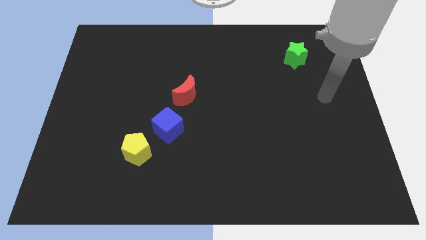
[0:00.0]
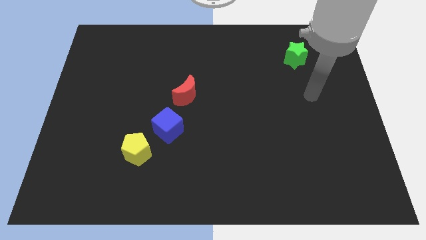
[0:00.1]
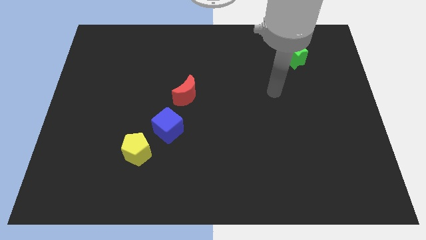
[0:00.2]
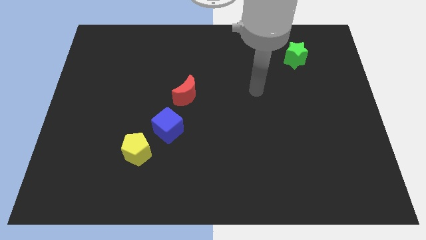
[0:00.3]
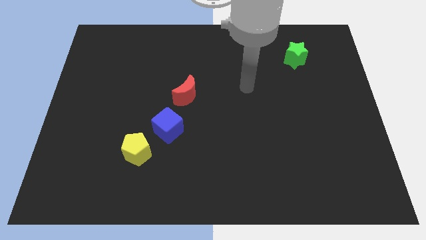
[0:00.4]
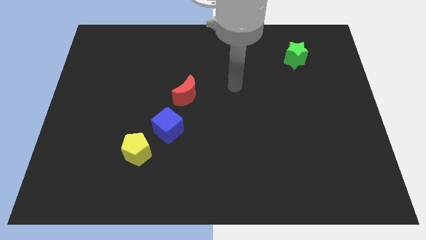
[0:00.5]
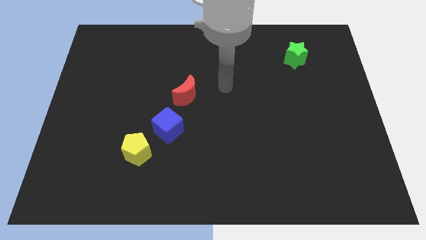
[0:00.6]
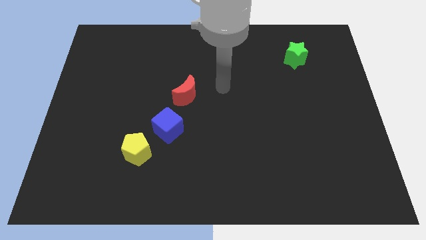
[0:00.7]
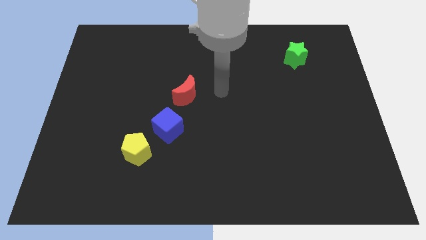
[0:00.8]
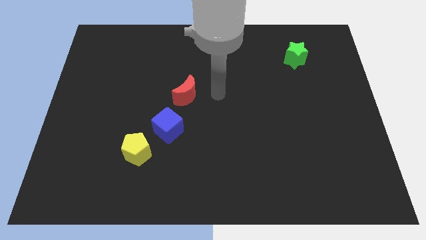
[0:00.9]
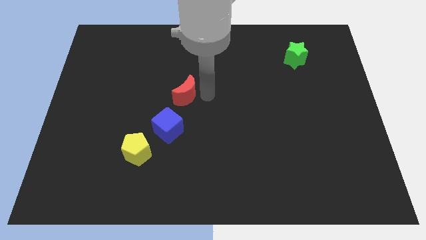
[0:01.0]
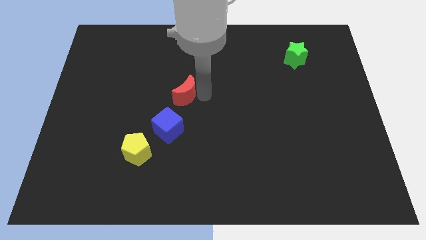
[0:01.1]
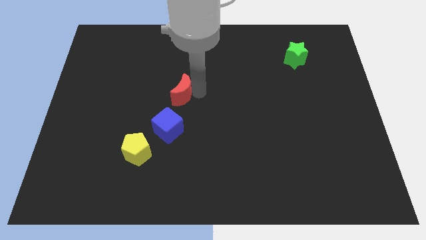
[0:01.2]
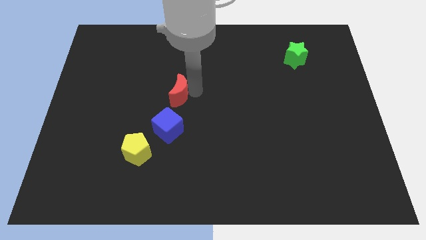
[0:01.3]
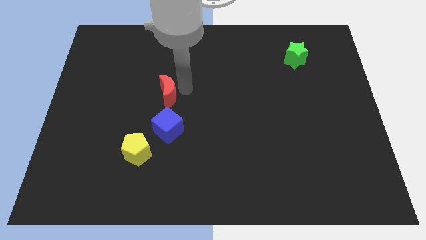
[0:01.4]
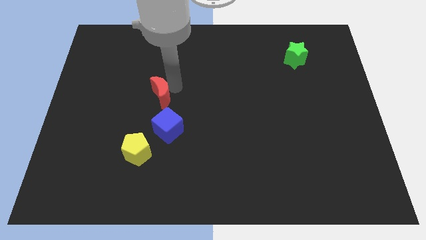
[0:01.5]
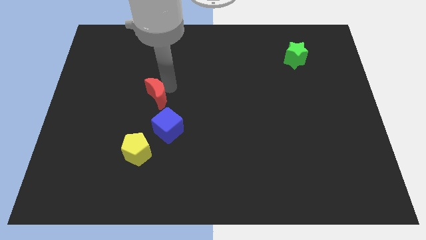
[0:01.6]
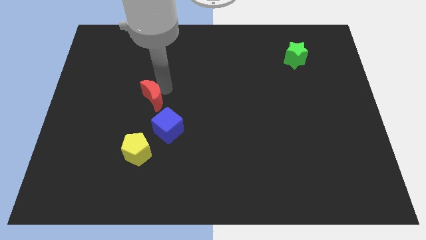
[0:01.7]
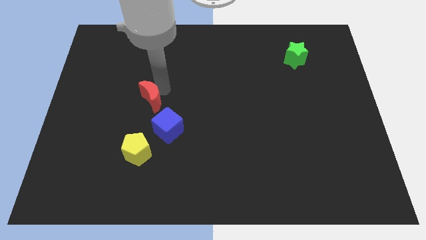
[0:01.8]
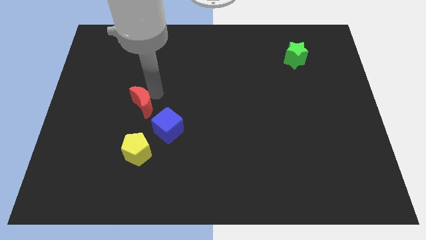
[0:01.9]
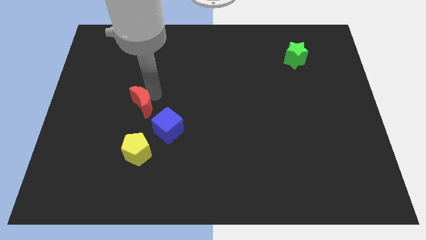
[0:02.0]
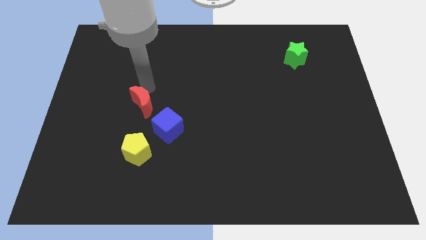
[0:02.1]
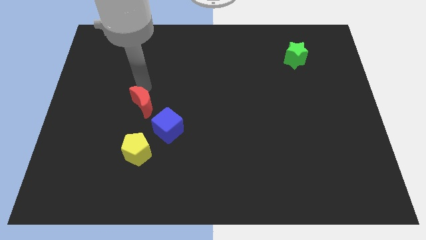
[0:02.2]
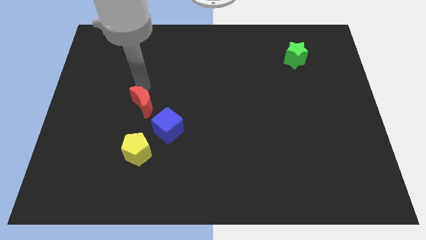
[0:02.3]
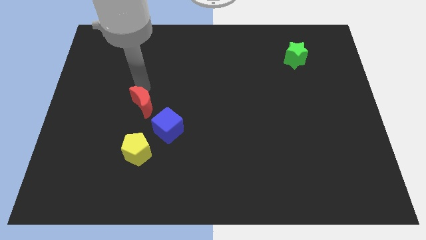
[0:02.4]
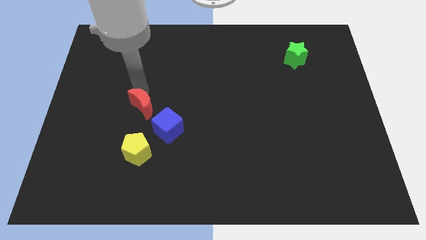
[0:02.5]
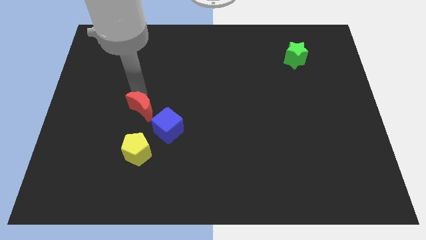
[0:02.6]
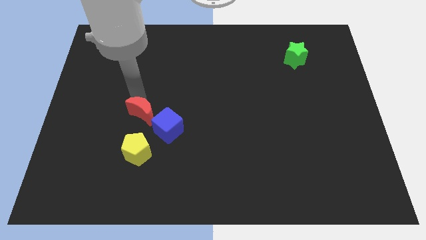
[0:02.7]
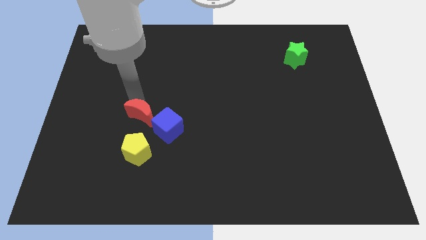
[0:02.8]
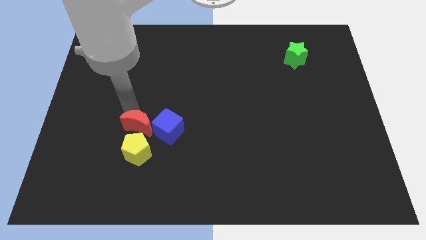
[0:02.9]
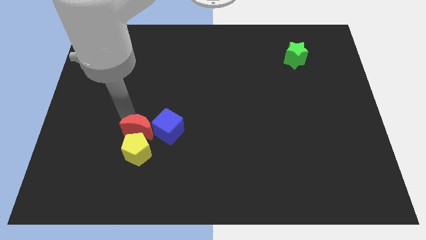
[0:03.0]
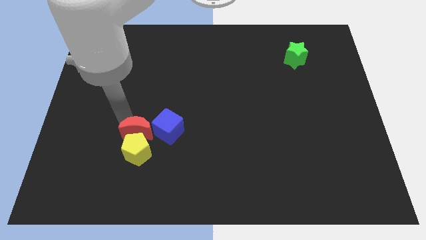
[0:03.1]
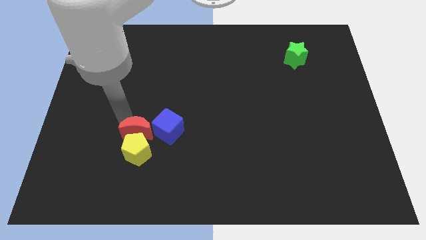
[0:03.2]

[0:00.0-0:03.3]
move the moon close to the pentagon

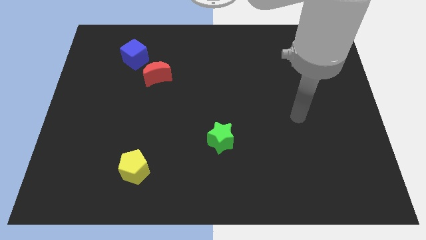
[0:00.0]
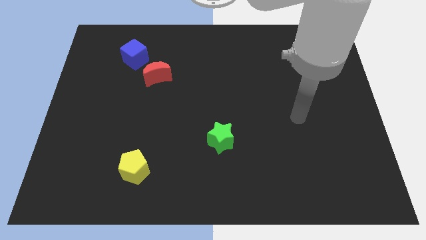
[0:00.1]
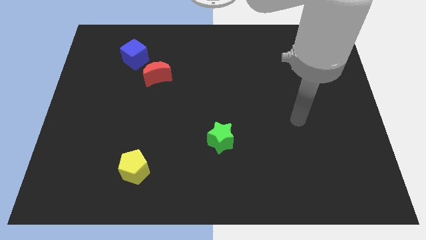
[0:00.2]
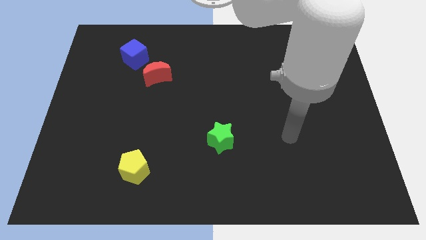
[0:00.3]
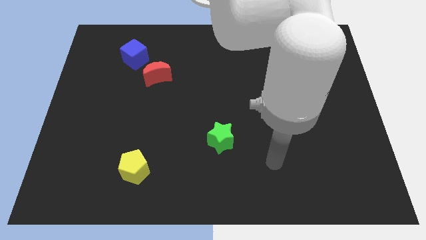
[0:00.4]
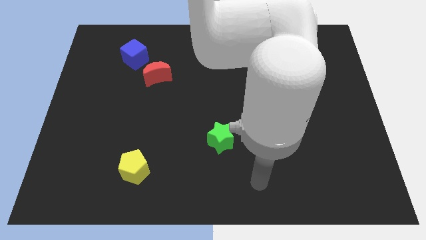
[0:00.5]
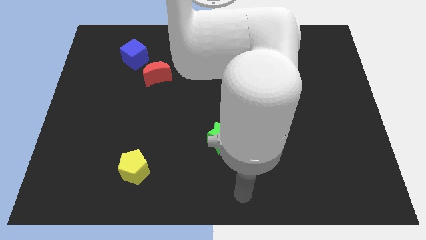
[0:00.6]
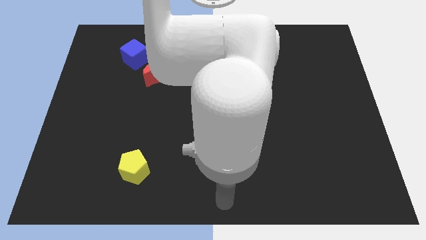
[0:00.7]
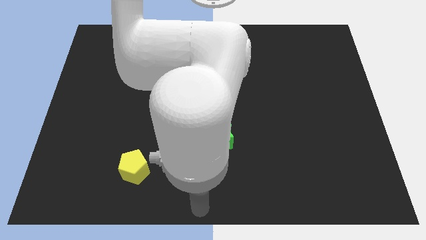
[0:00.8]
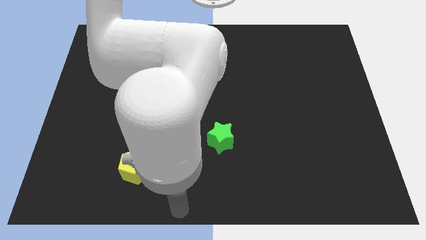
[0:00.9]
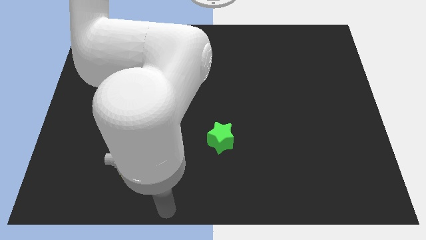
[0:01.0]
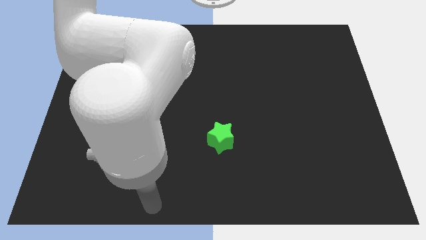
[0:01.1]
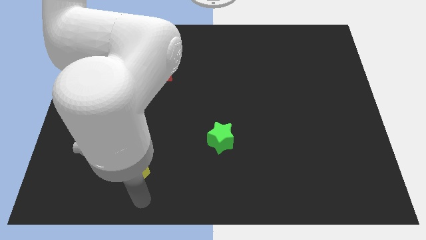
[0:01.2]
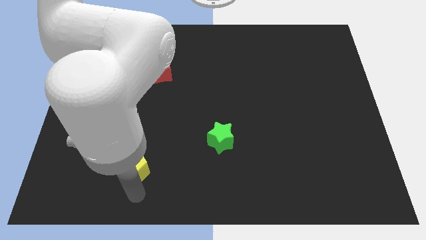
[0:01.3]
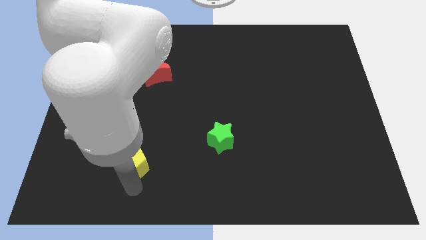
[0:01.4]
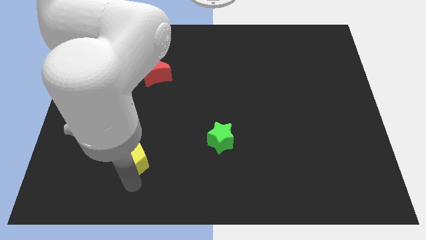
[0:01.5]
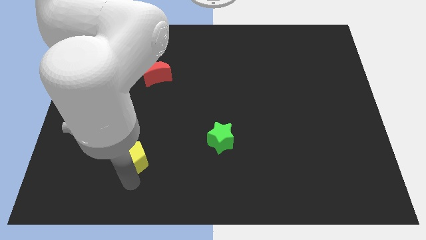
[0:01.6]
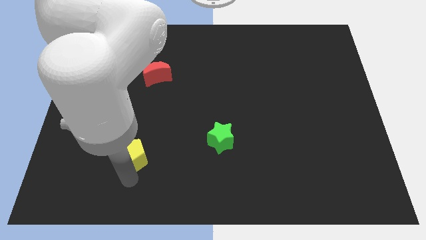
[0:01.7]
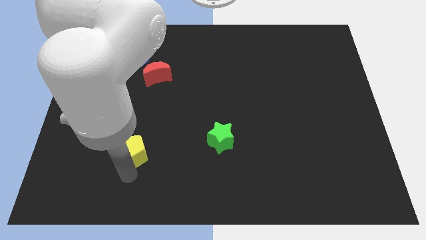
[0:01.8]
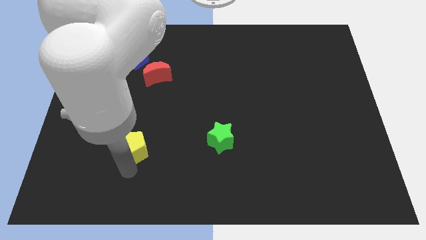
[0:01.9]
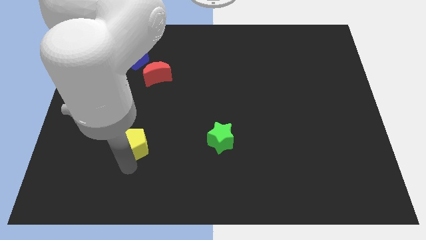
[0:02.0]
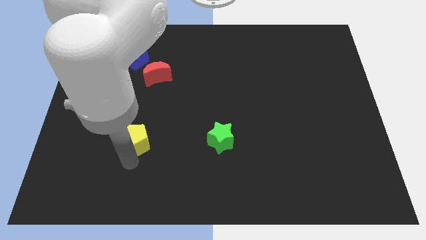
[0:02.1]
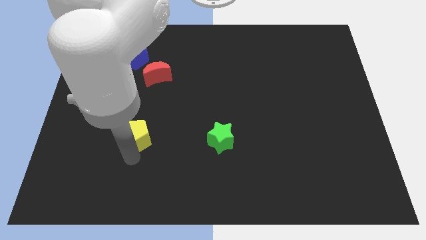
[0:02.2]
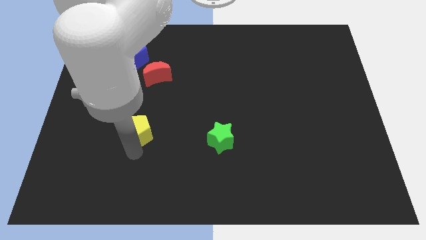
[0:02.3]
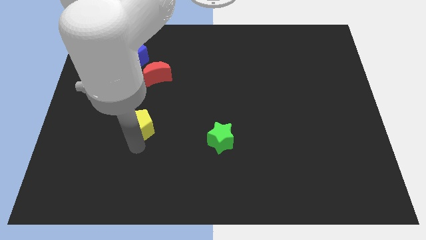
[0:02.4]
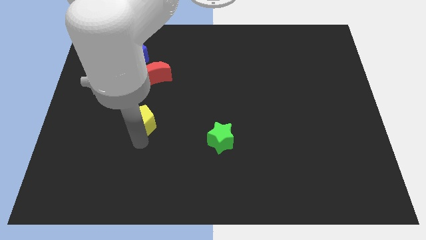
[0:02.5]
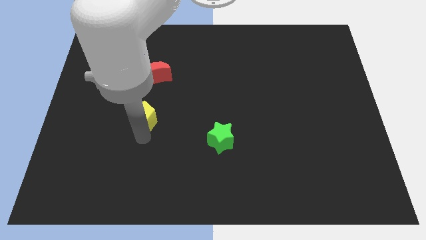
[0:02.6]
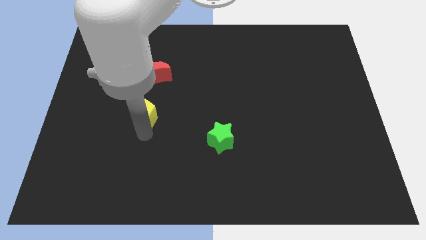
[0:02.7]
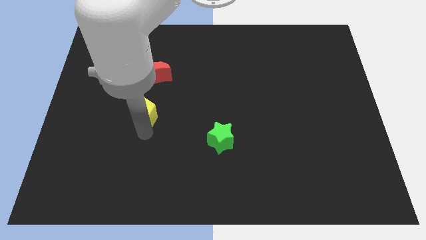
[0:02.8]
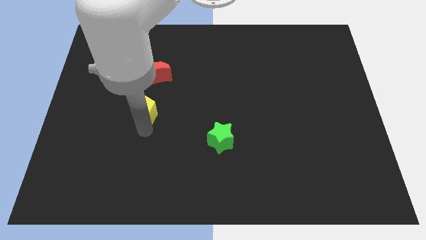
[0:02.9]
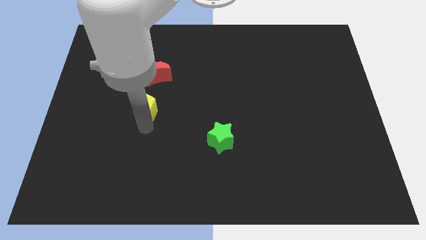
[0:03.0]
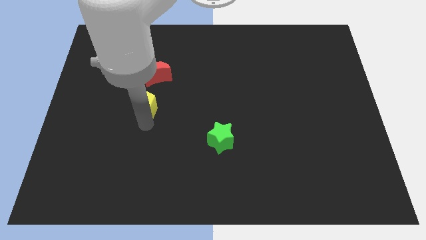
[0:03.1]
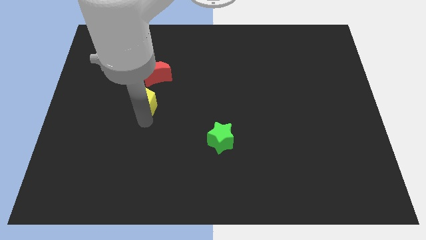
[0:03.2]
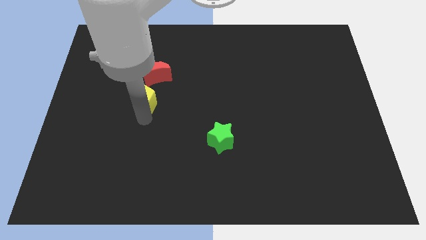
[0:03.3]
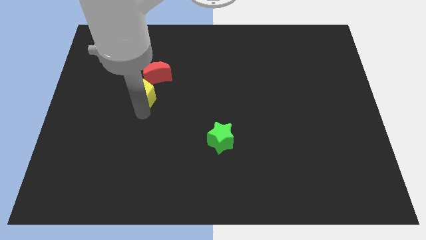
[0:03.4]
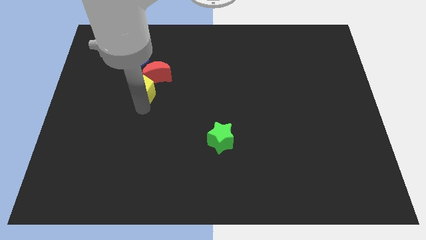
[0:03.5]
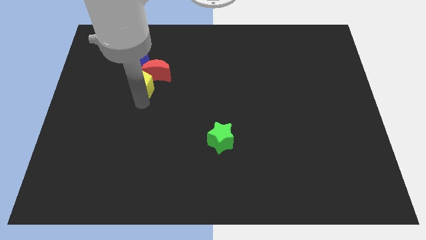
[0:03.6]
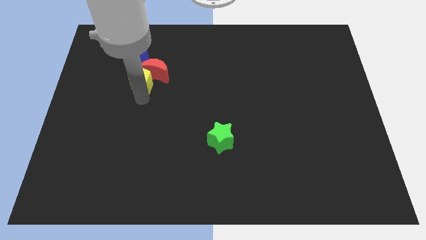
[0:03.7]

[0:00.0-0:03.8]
put the yellow block close to the red block

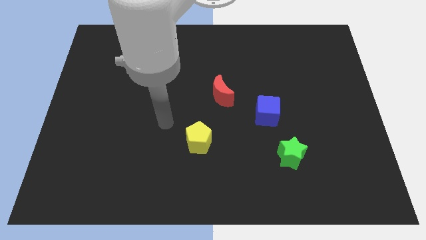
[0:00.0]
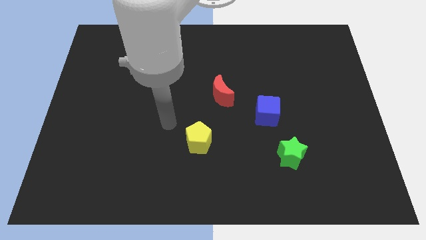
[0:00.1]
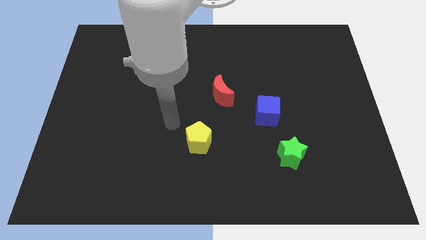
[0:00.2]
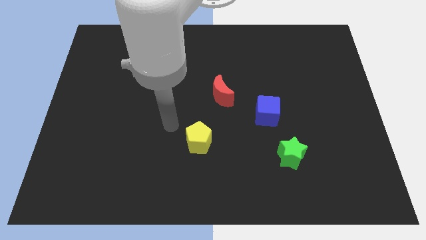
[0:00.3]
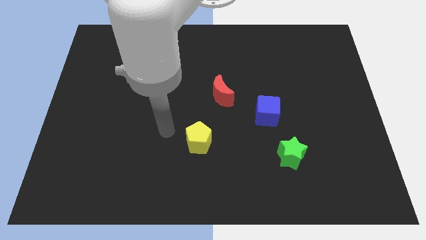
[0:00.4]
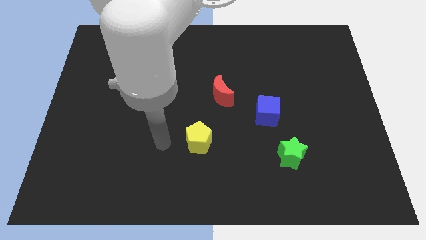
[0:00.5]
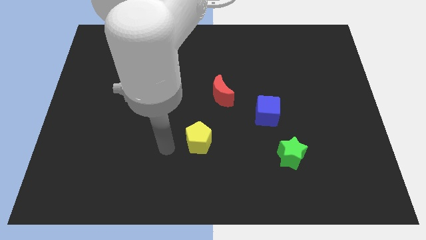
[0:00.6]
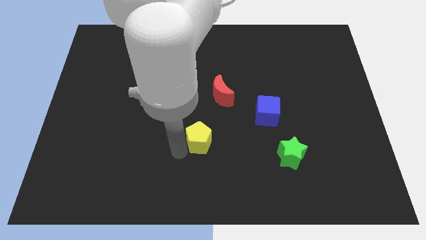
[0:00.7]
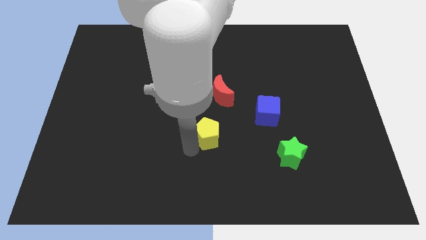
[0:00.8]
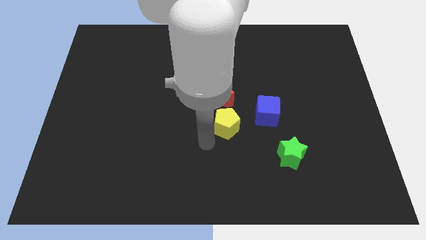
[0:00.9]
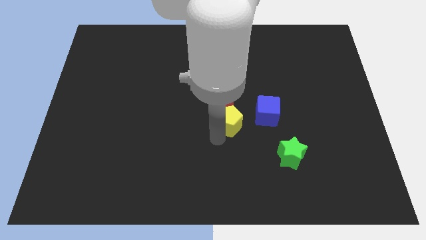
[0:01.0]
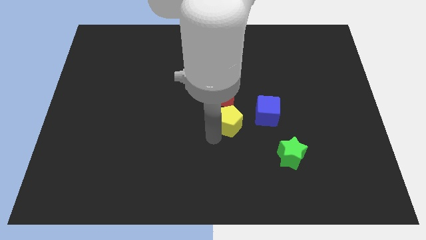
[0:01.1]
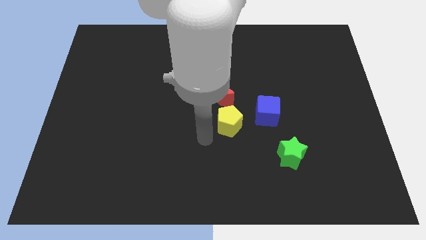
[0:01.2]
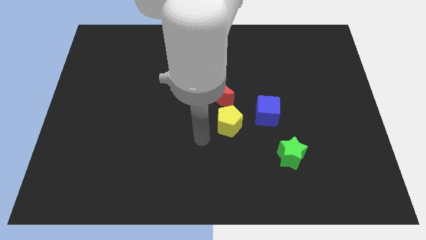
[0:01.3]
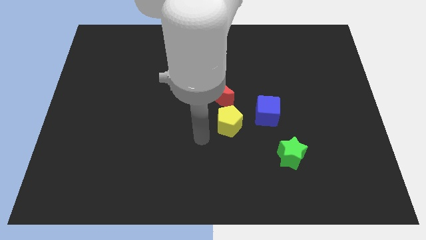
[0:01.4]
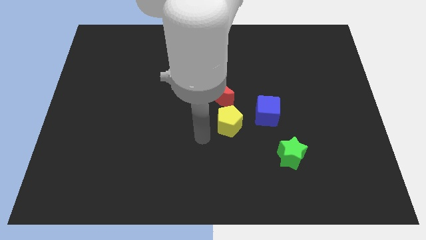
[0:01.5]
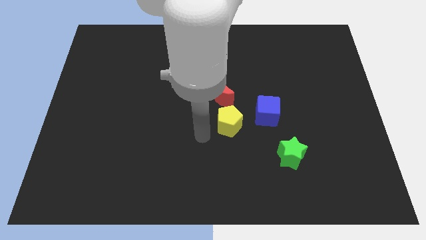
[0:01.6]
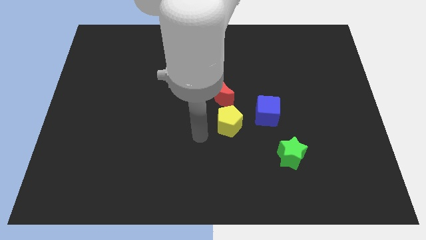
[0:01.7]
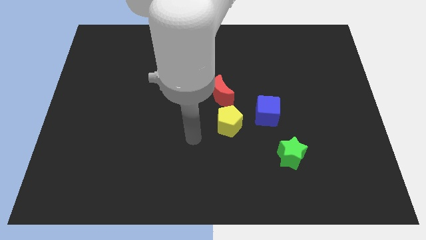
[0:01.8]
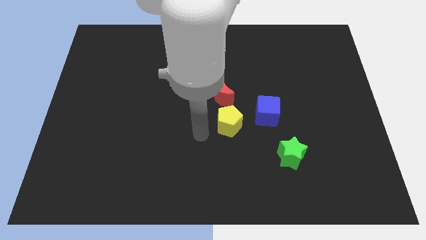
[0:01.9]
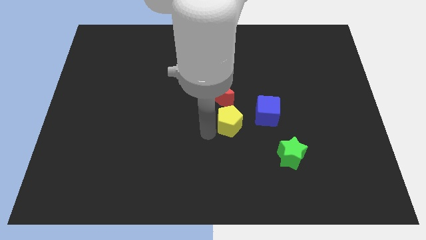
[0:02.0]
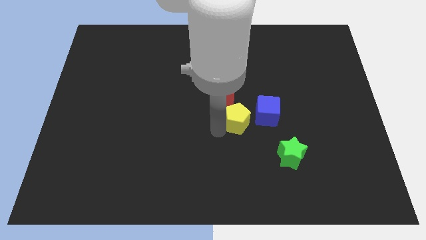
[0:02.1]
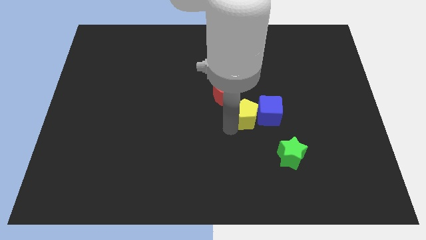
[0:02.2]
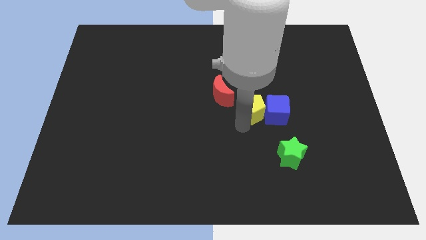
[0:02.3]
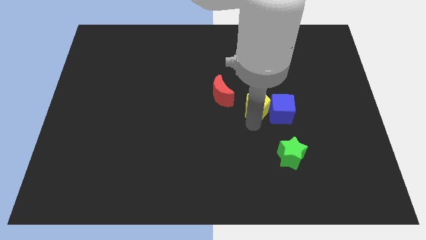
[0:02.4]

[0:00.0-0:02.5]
move the yellow block to the blue cube
